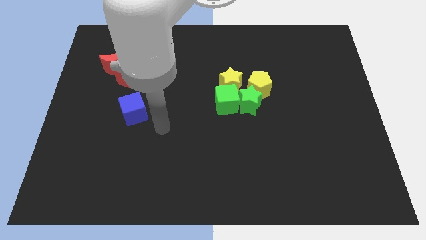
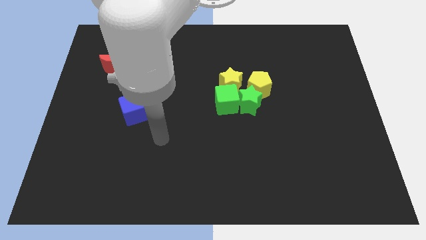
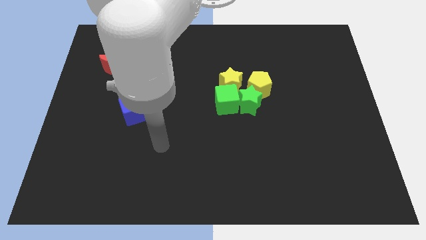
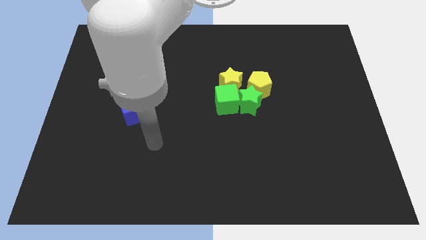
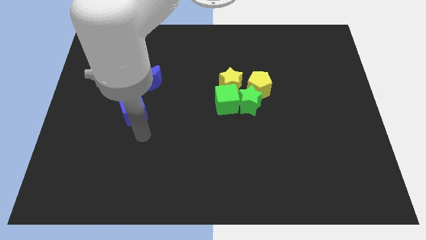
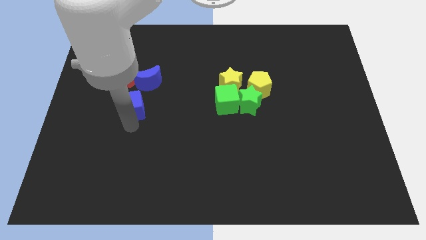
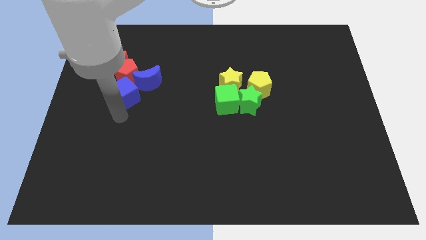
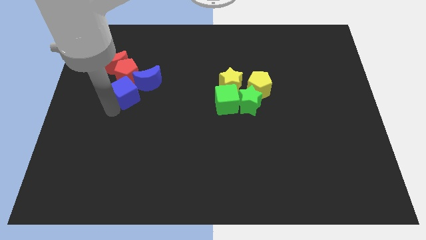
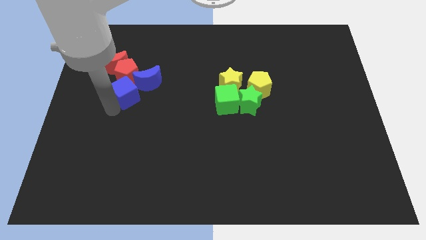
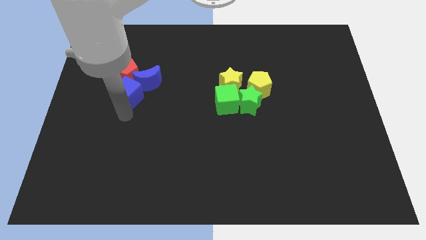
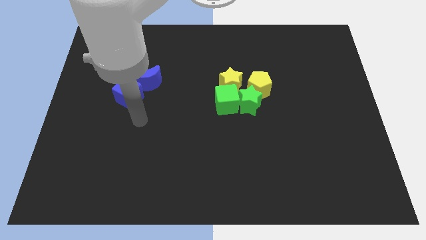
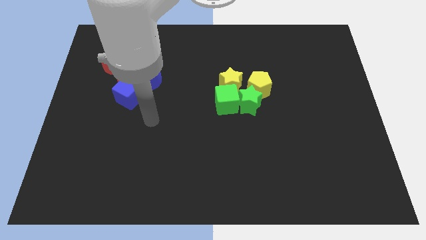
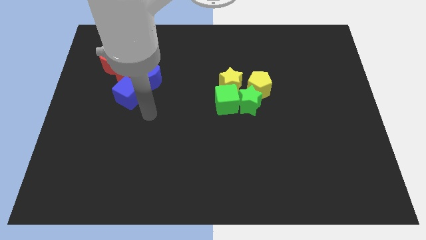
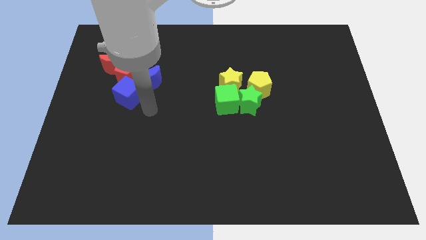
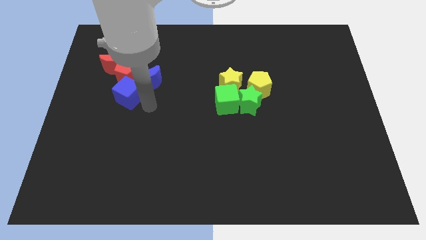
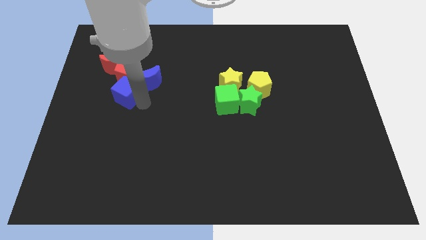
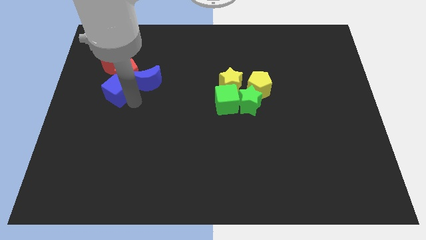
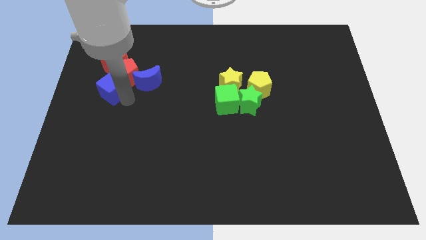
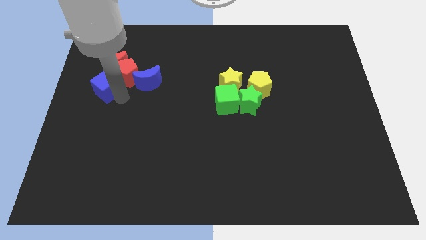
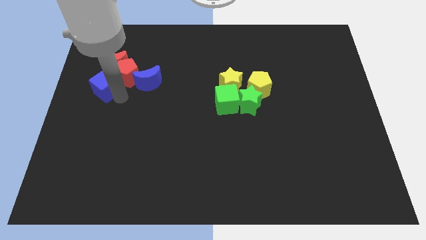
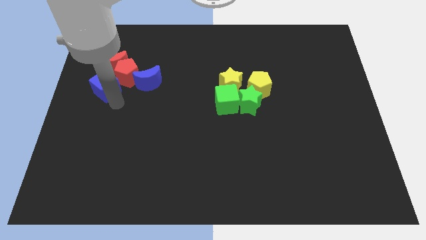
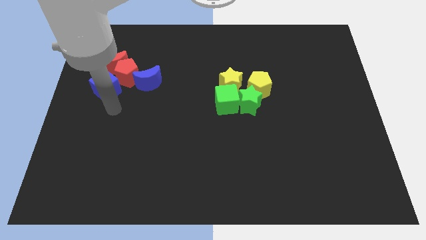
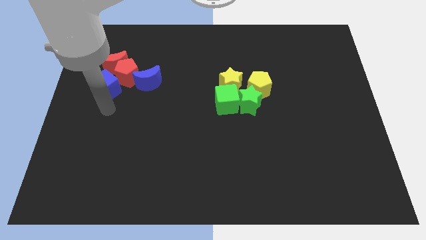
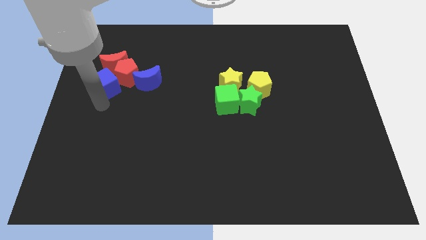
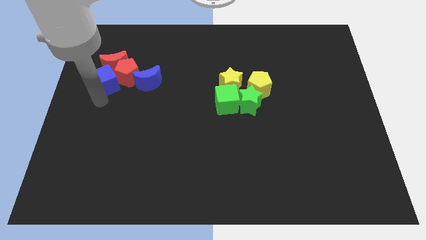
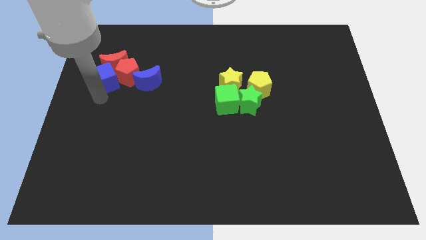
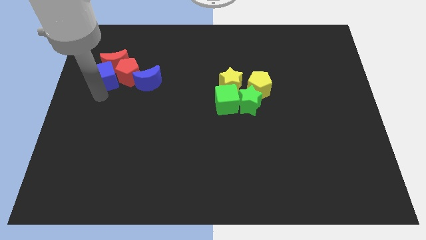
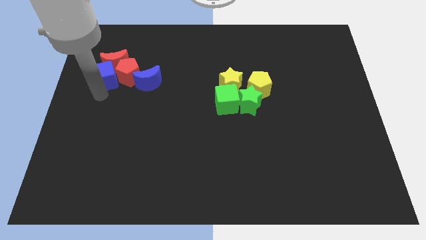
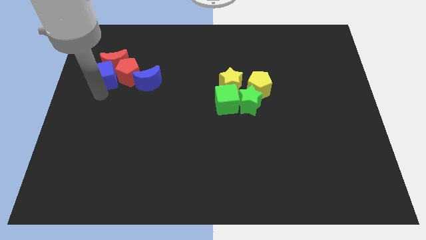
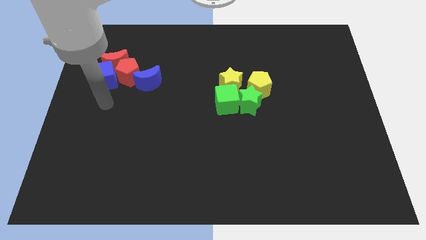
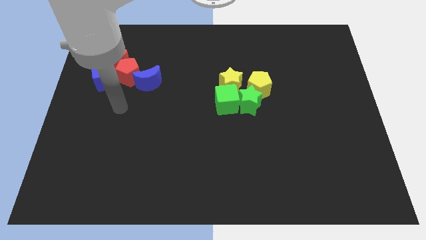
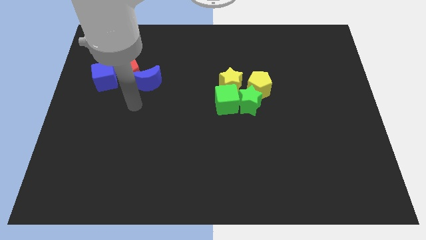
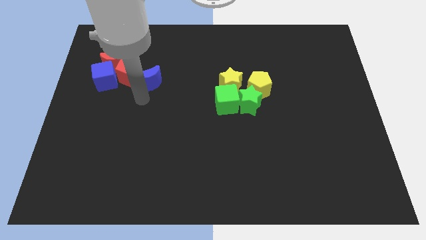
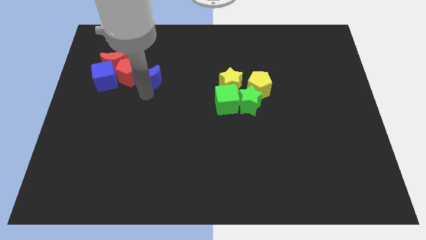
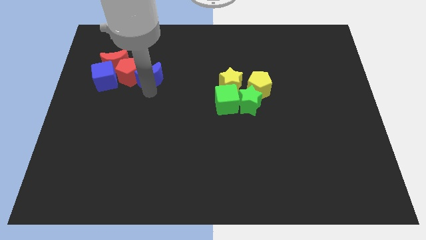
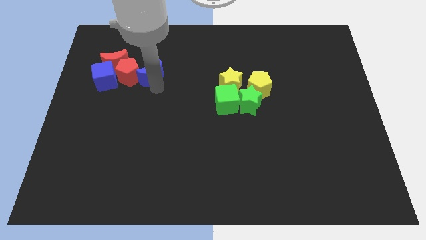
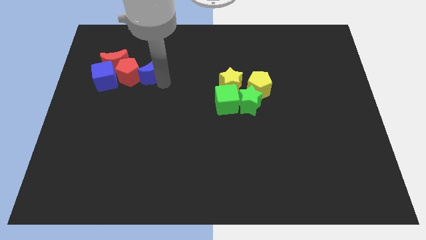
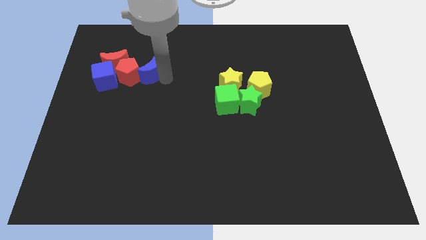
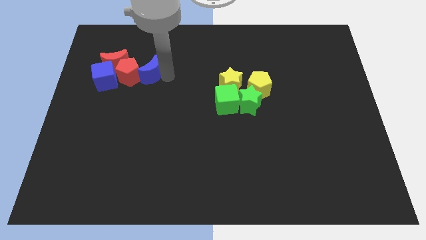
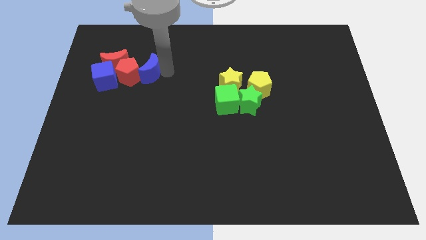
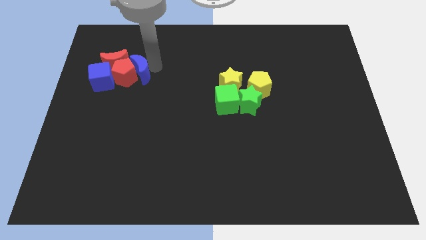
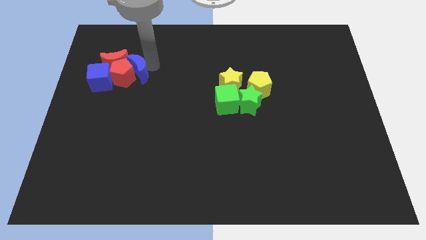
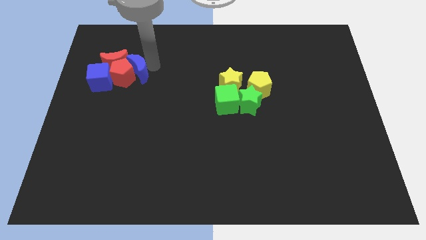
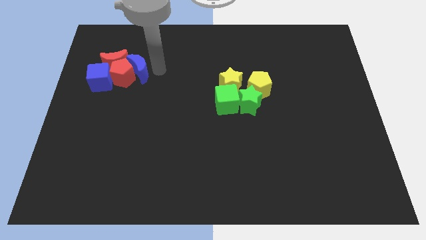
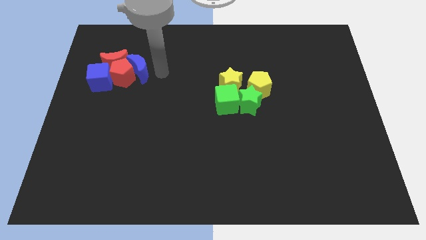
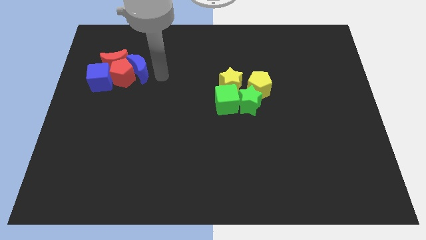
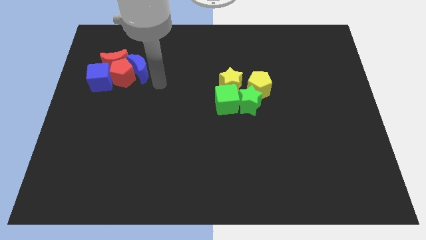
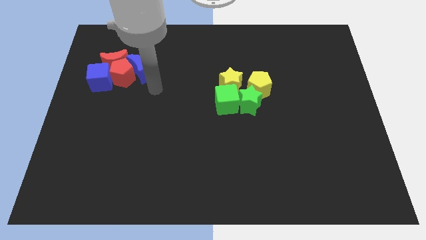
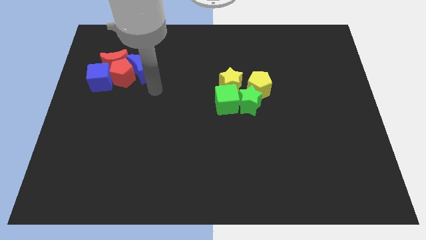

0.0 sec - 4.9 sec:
make a group of red and blue blocks

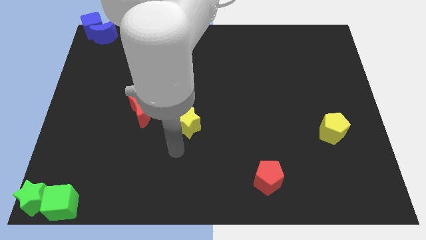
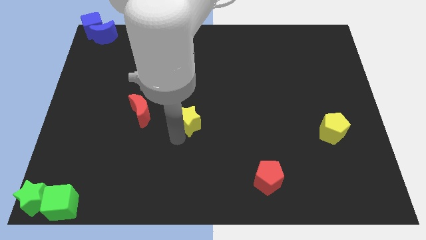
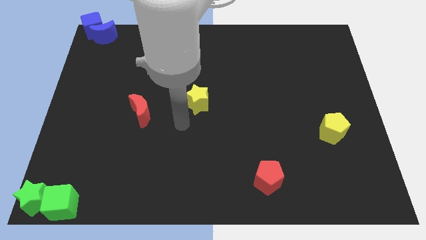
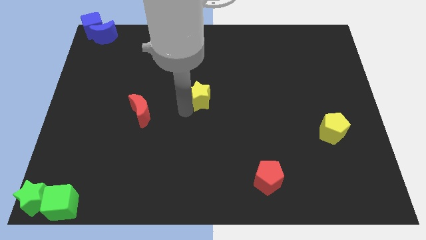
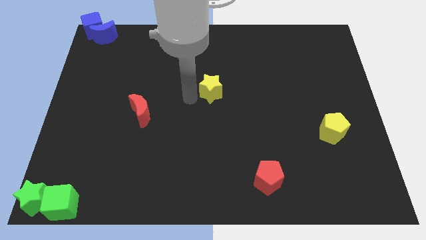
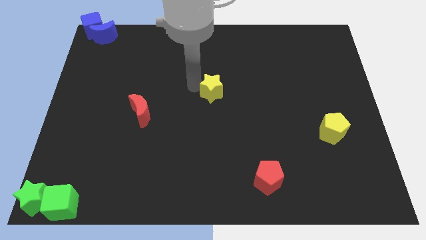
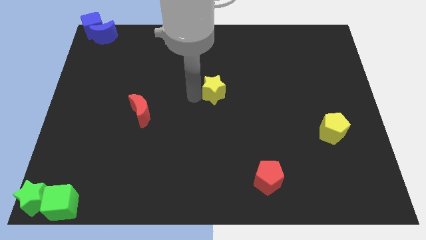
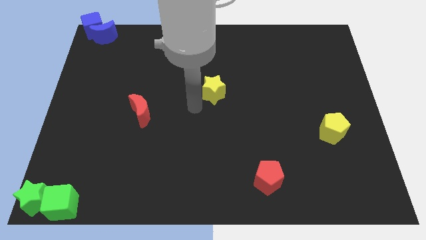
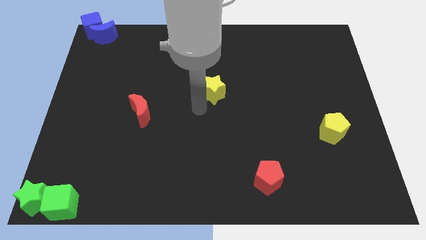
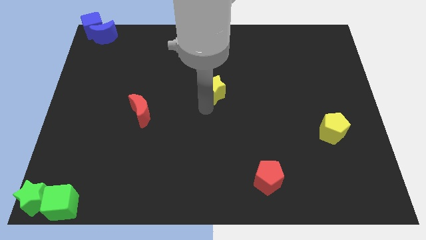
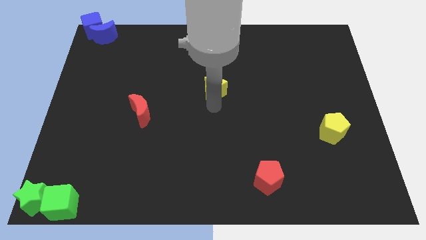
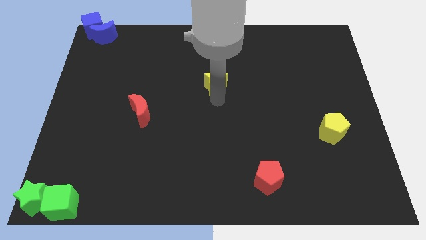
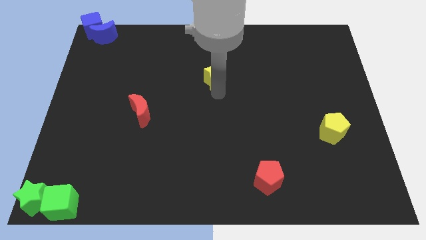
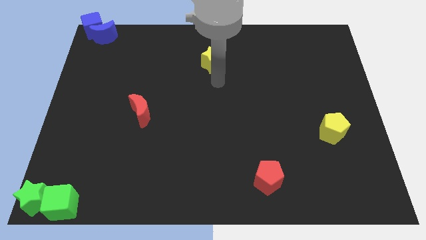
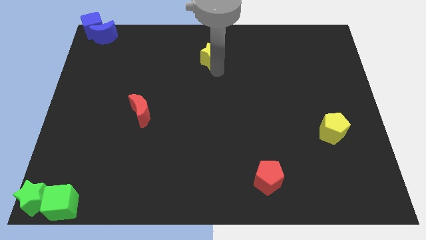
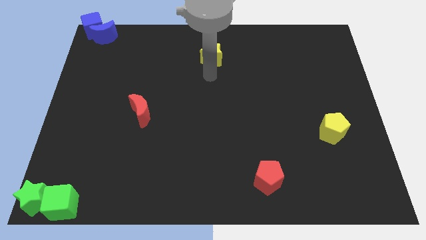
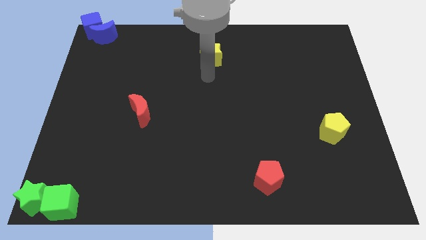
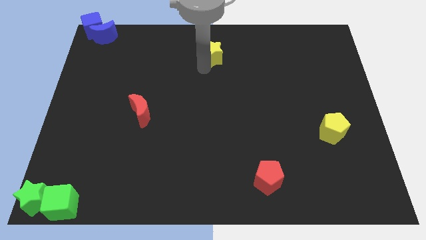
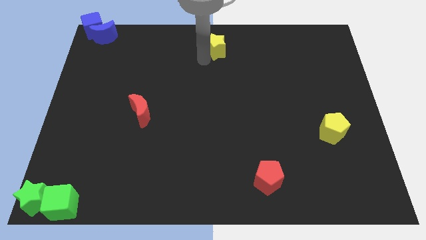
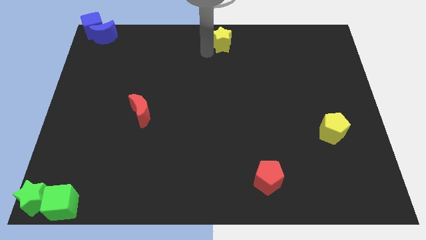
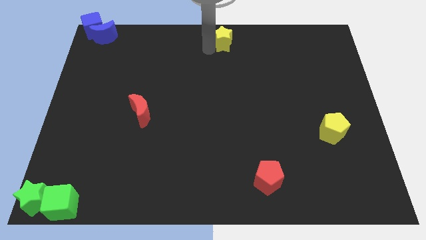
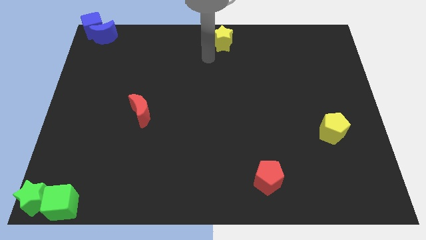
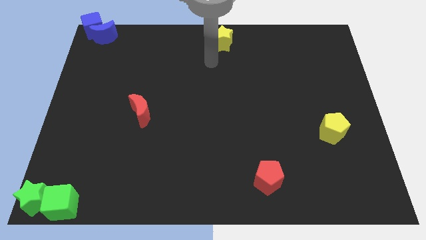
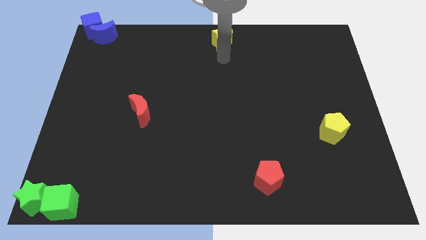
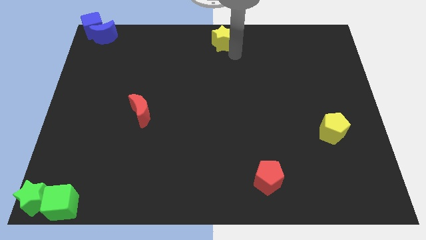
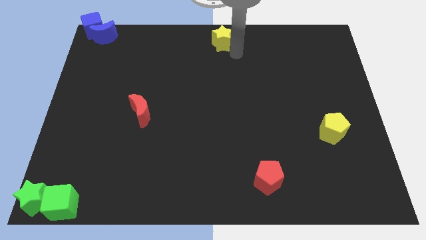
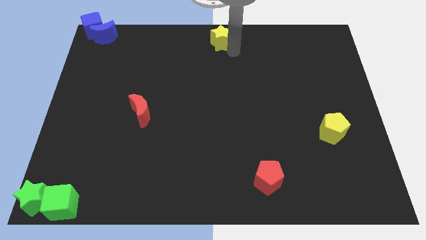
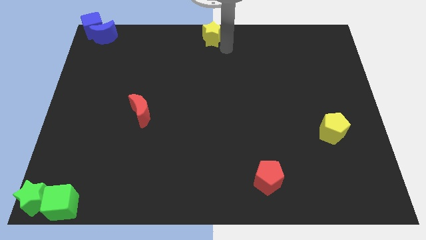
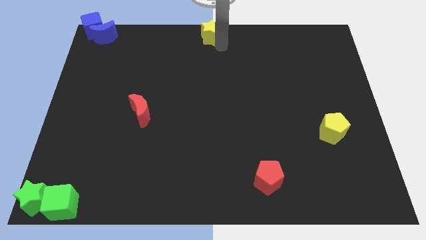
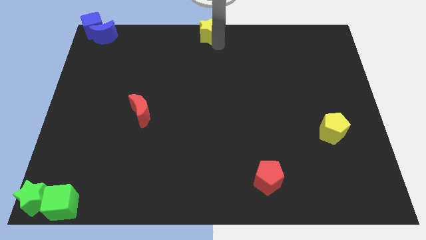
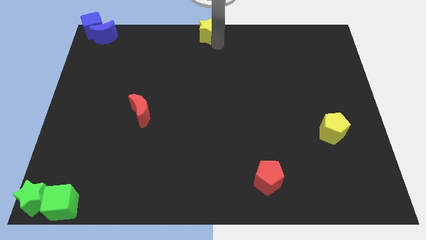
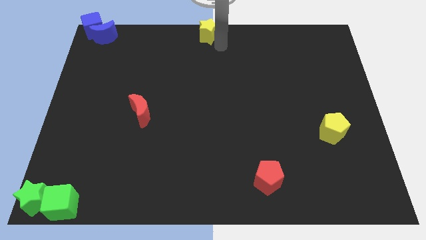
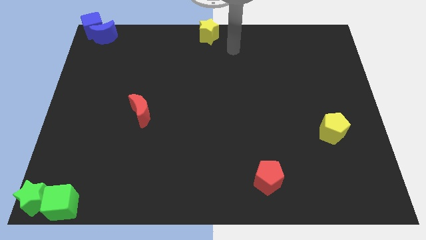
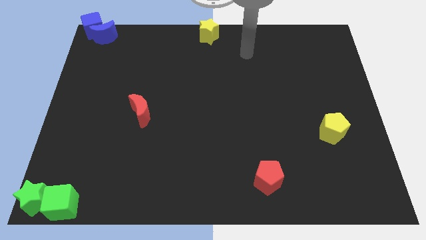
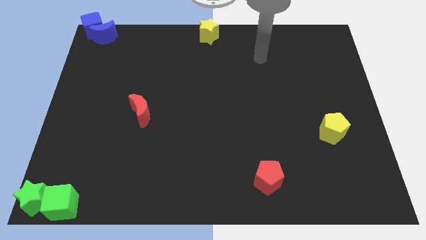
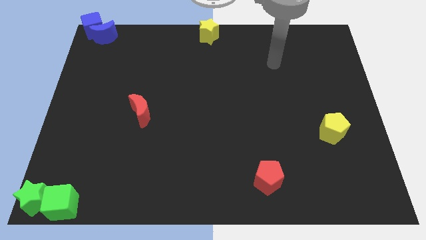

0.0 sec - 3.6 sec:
place yellow star at center top

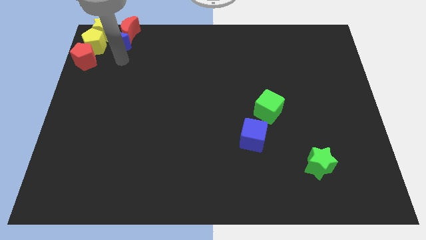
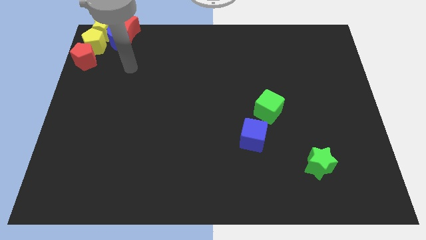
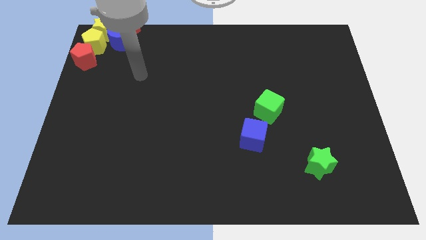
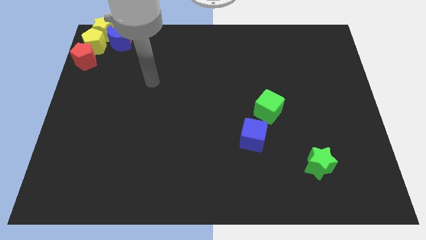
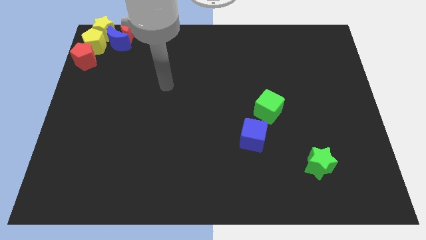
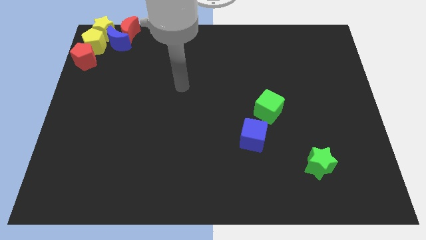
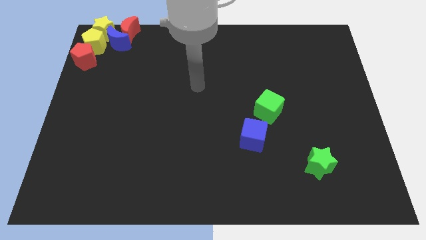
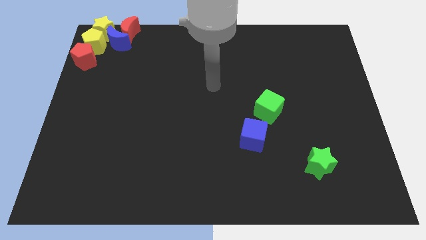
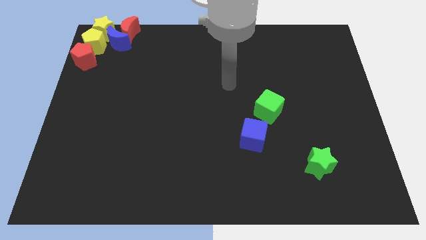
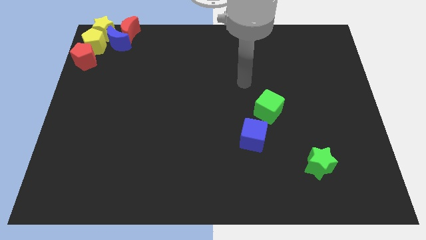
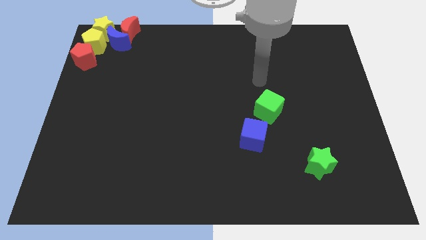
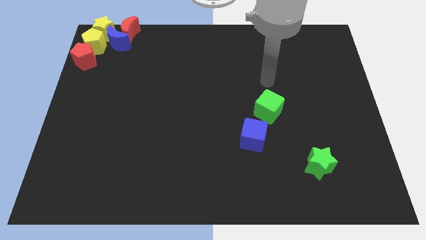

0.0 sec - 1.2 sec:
point the arm above the green cube
